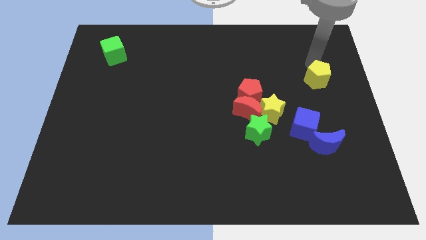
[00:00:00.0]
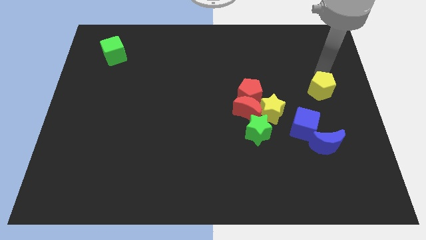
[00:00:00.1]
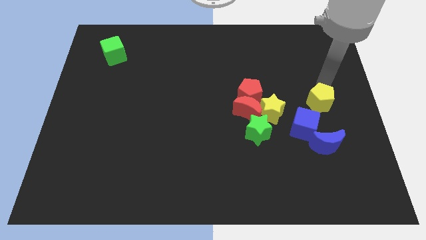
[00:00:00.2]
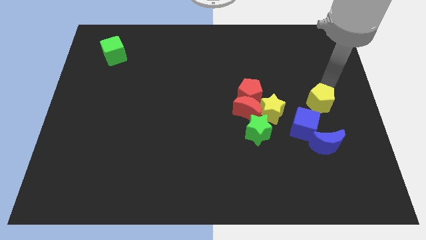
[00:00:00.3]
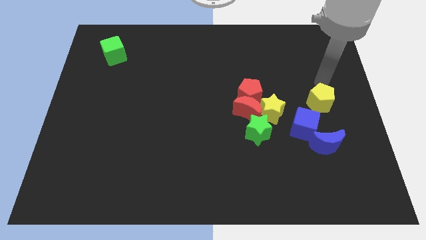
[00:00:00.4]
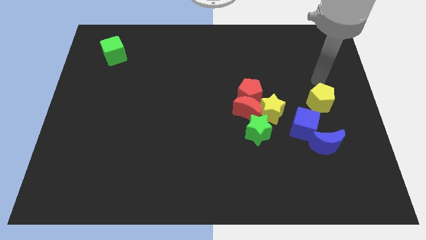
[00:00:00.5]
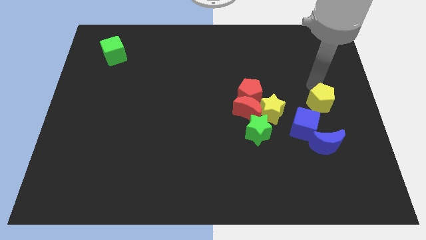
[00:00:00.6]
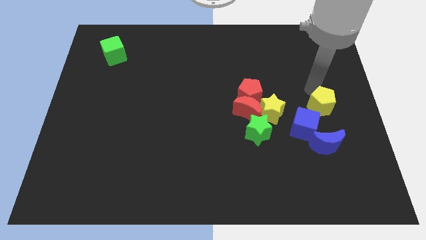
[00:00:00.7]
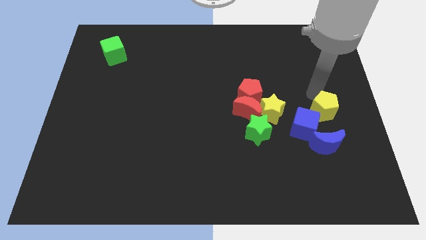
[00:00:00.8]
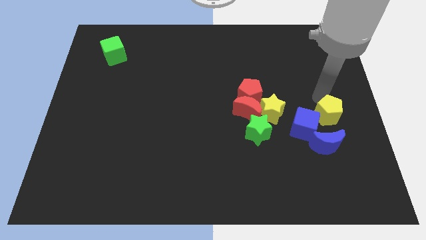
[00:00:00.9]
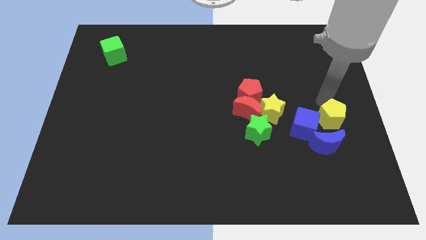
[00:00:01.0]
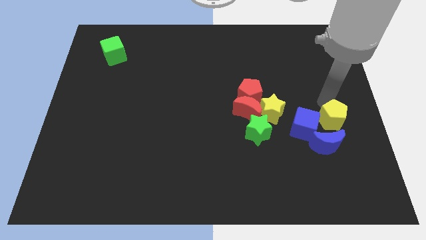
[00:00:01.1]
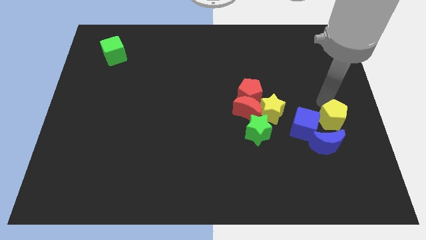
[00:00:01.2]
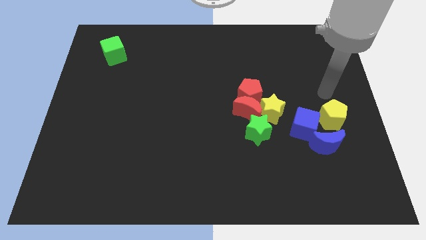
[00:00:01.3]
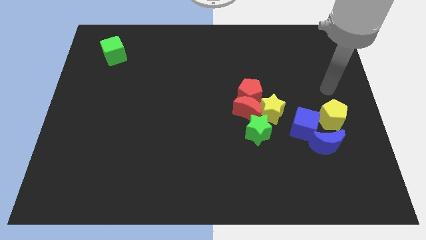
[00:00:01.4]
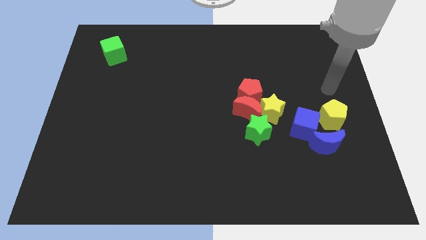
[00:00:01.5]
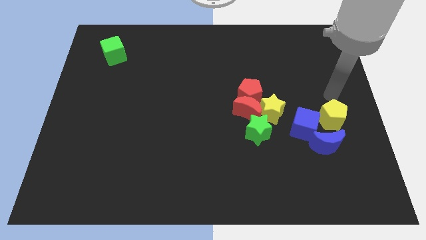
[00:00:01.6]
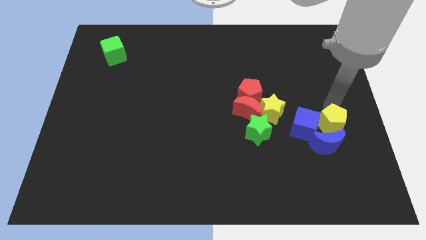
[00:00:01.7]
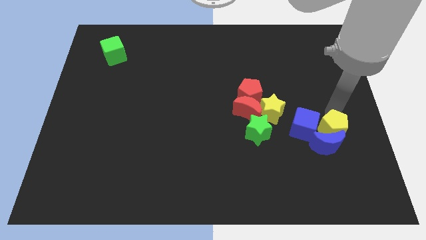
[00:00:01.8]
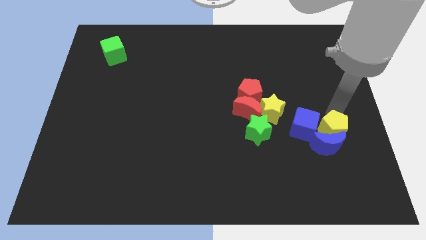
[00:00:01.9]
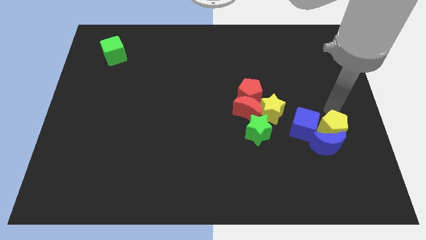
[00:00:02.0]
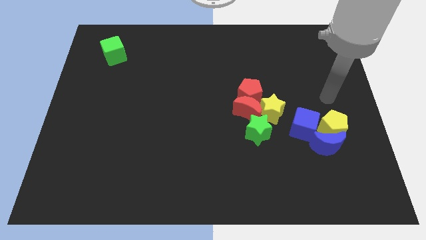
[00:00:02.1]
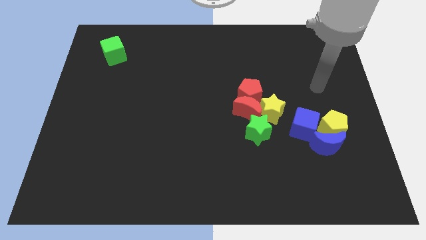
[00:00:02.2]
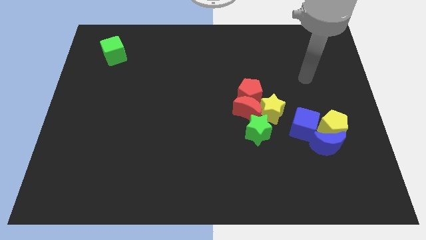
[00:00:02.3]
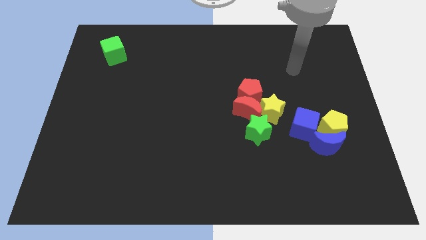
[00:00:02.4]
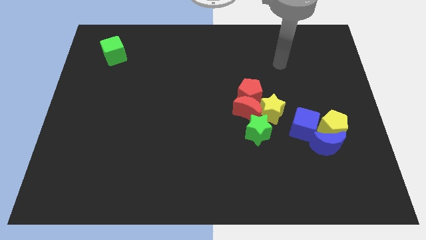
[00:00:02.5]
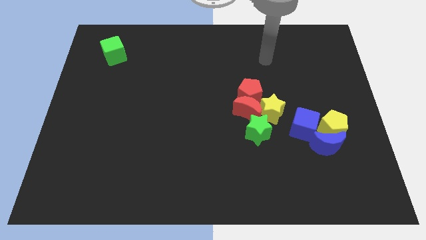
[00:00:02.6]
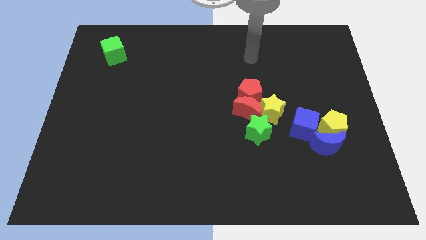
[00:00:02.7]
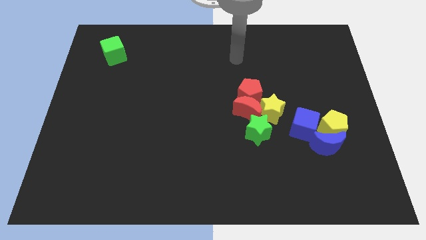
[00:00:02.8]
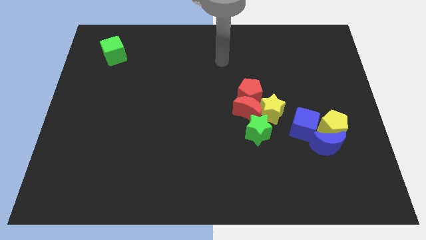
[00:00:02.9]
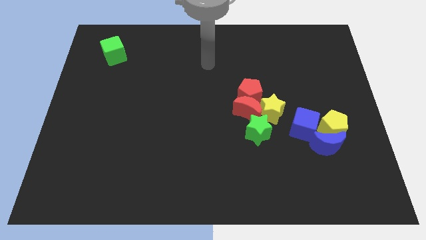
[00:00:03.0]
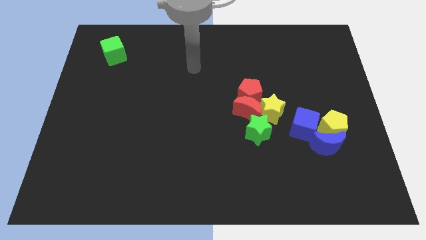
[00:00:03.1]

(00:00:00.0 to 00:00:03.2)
move the yellow pentagon towards the blue crescent

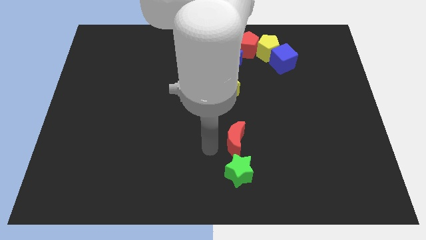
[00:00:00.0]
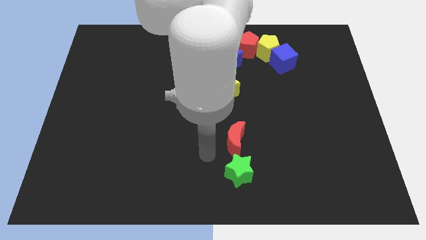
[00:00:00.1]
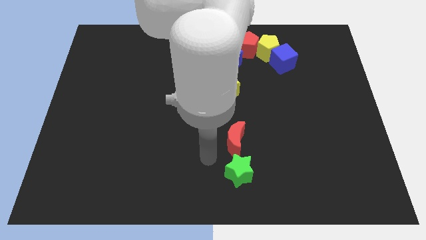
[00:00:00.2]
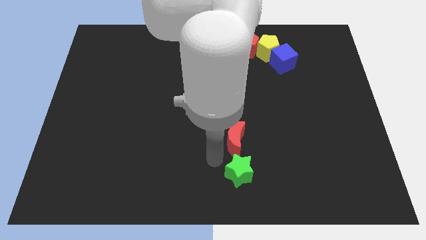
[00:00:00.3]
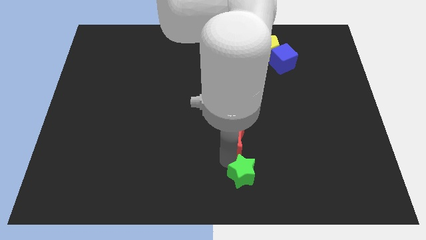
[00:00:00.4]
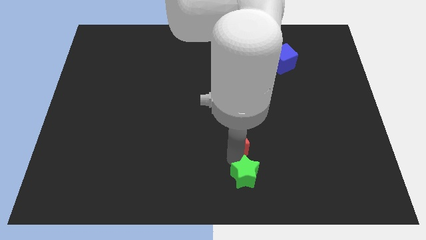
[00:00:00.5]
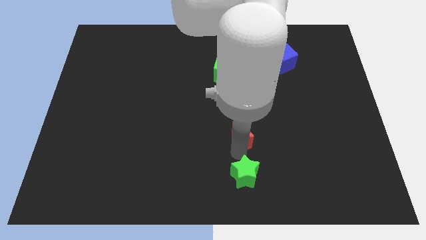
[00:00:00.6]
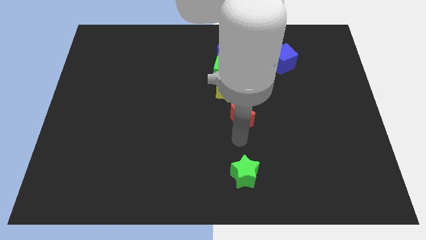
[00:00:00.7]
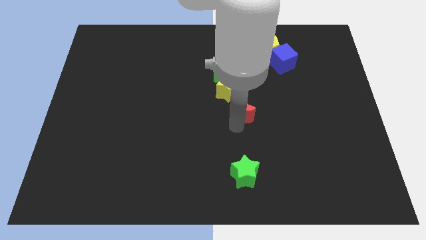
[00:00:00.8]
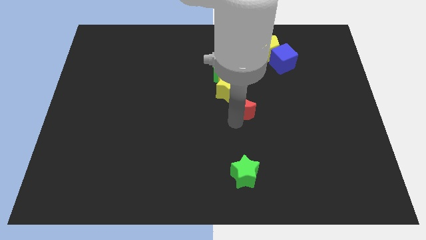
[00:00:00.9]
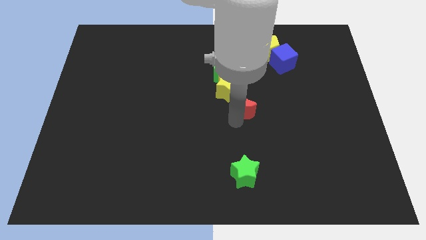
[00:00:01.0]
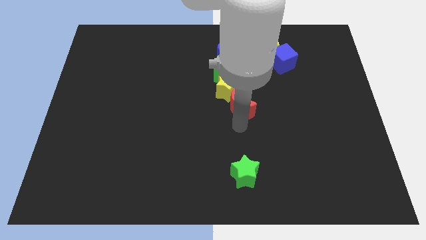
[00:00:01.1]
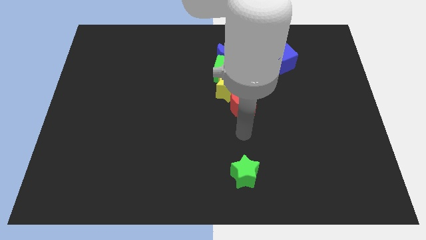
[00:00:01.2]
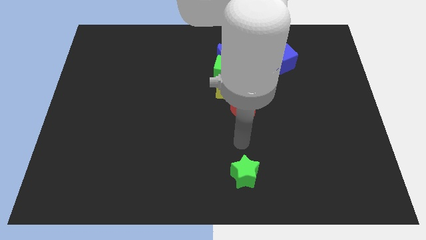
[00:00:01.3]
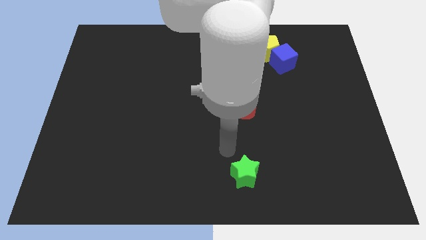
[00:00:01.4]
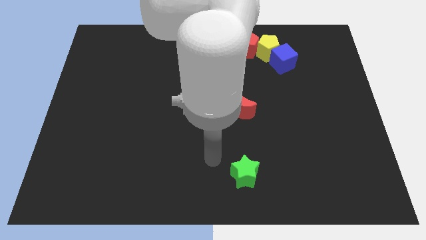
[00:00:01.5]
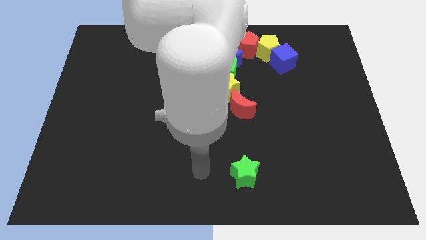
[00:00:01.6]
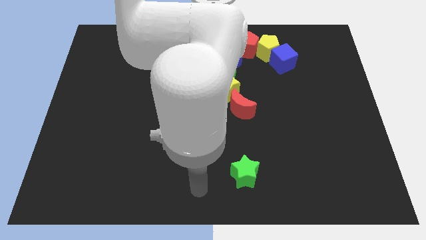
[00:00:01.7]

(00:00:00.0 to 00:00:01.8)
move the red moon into the yellow star

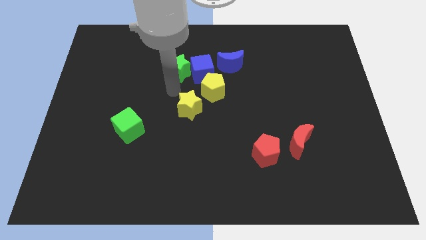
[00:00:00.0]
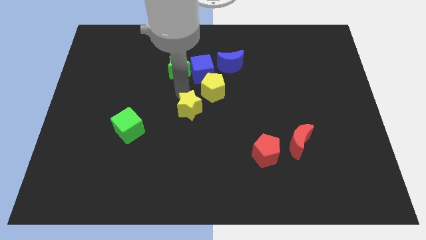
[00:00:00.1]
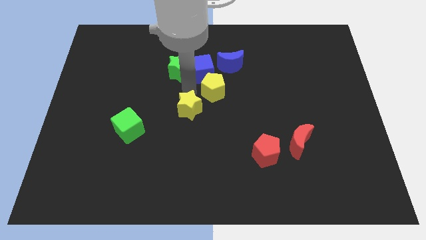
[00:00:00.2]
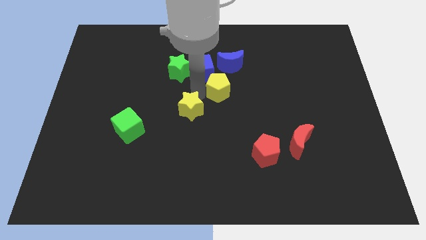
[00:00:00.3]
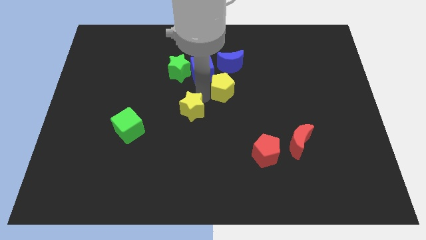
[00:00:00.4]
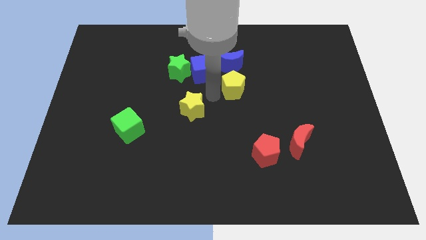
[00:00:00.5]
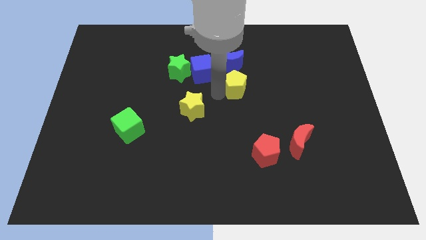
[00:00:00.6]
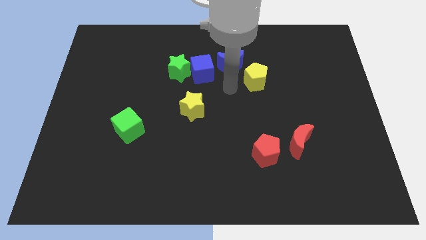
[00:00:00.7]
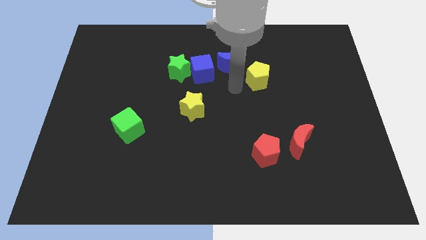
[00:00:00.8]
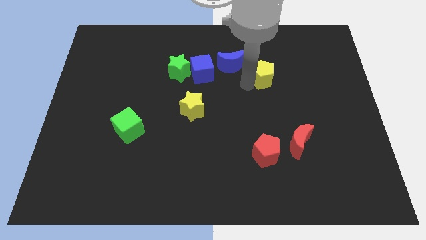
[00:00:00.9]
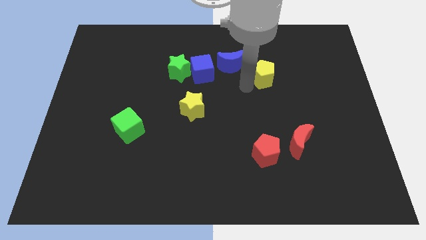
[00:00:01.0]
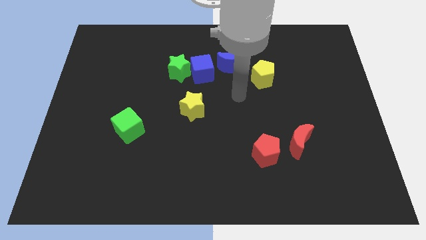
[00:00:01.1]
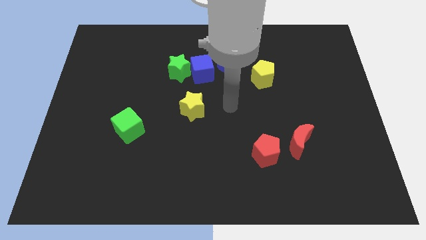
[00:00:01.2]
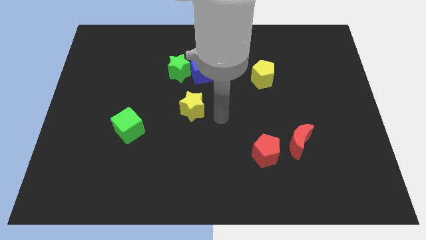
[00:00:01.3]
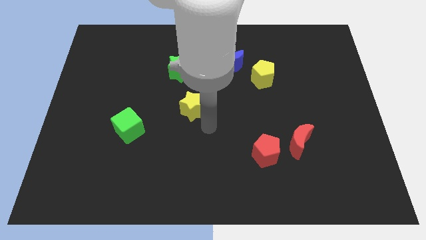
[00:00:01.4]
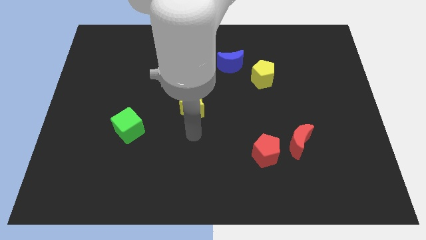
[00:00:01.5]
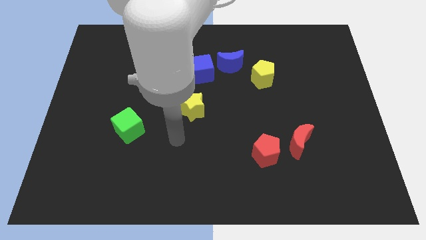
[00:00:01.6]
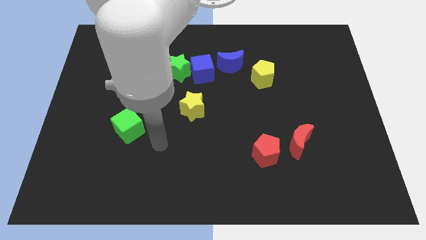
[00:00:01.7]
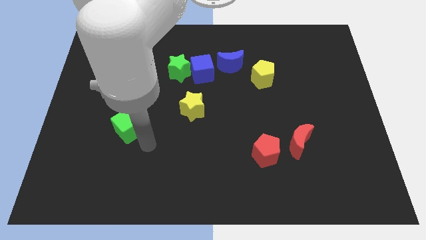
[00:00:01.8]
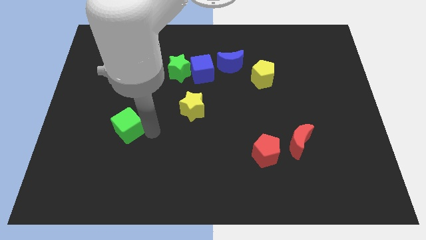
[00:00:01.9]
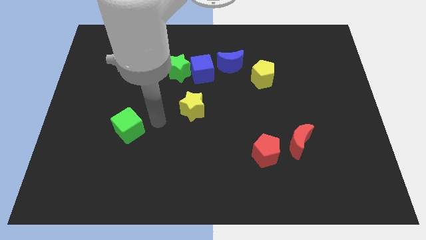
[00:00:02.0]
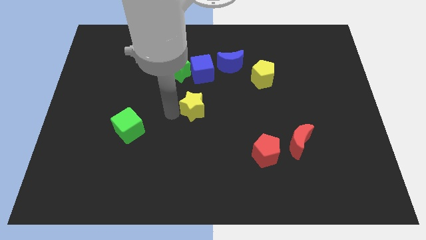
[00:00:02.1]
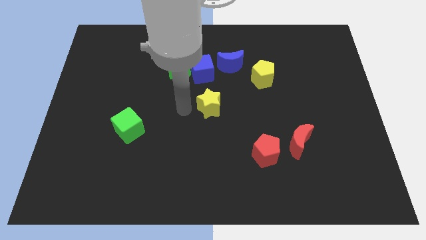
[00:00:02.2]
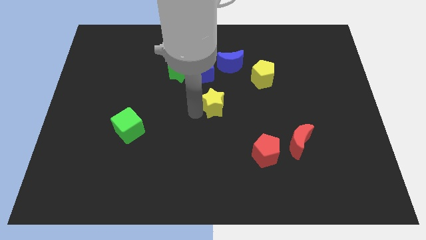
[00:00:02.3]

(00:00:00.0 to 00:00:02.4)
move the yellow pentagon towards the right of the blue crescent

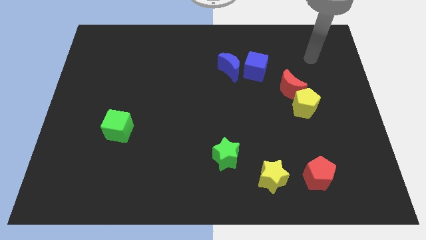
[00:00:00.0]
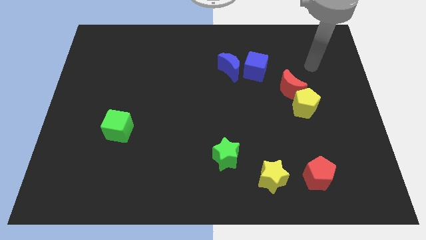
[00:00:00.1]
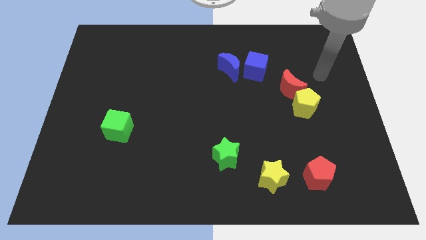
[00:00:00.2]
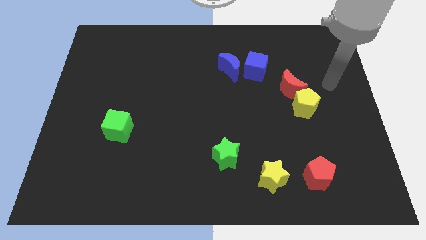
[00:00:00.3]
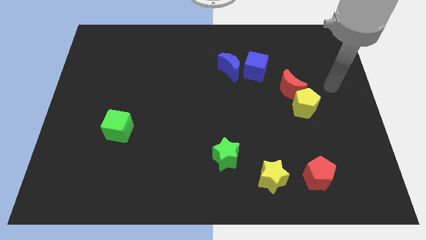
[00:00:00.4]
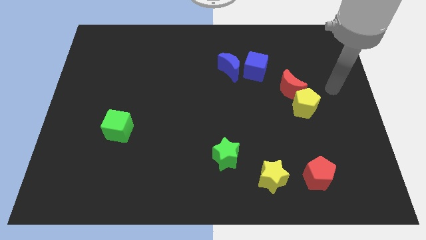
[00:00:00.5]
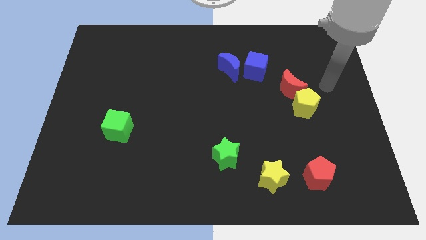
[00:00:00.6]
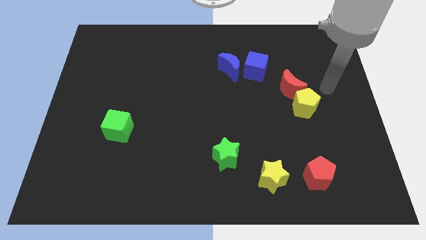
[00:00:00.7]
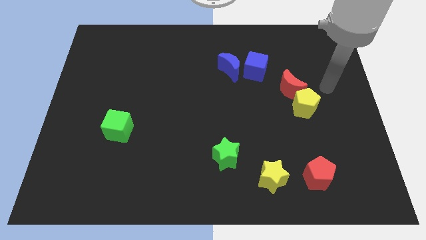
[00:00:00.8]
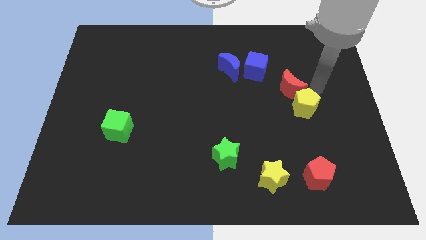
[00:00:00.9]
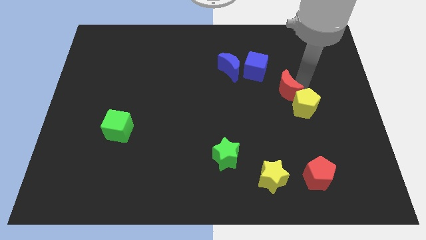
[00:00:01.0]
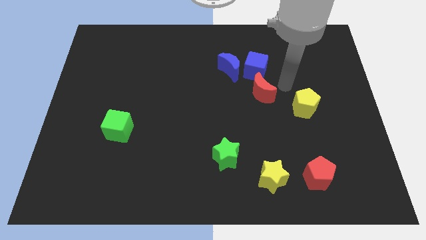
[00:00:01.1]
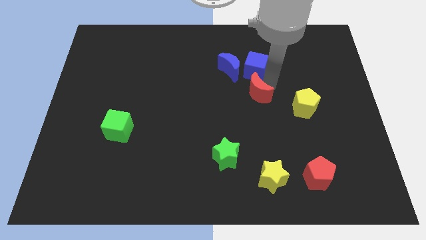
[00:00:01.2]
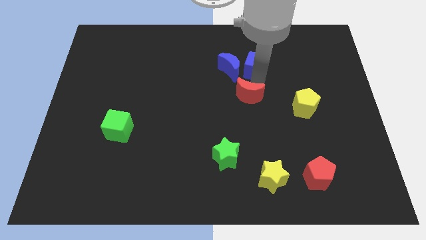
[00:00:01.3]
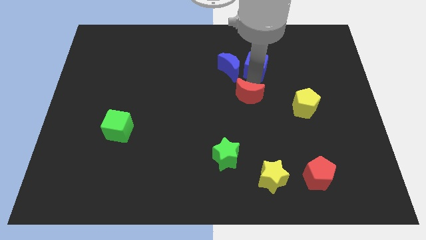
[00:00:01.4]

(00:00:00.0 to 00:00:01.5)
push the red crescent to the bottom of blue cube
